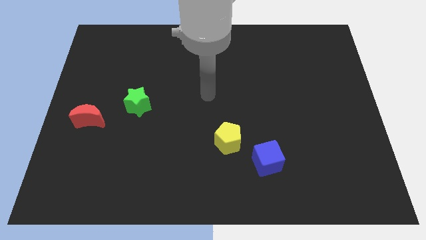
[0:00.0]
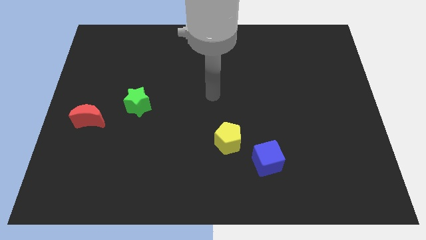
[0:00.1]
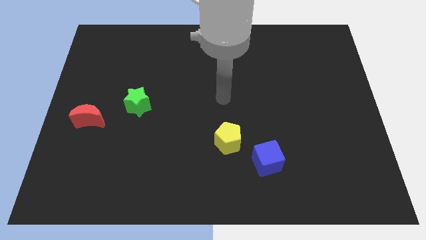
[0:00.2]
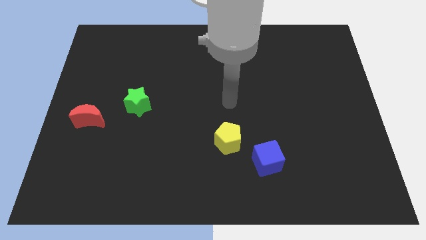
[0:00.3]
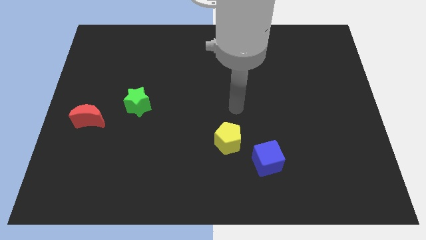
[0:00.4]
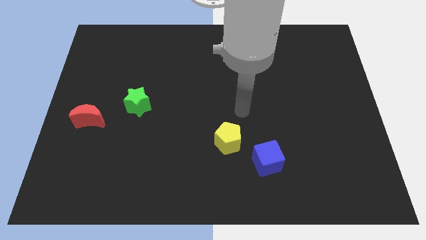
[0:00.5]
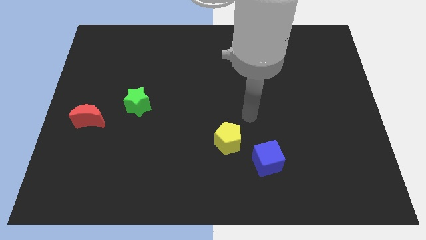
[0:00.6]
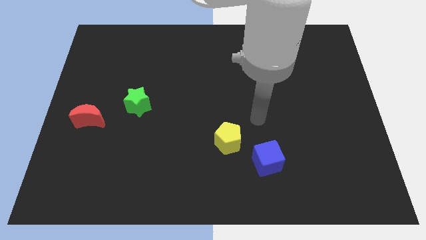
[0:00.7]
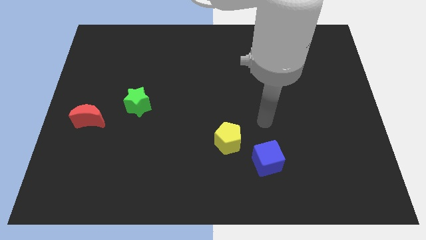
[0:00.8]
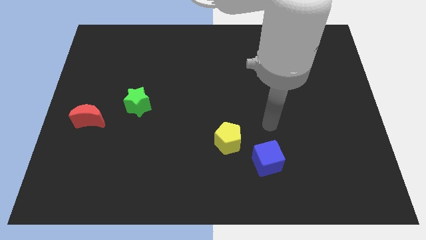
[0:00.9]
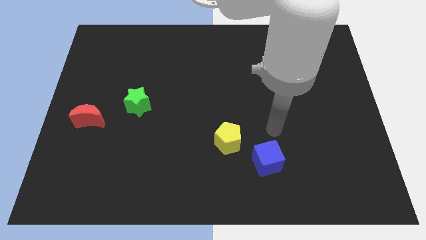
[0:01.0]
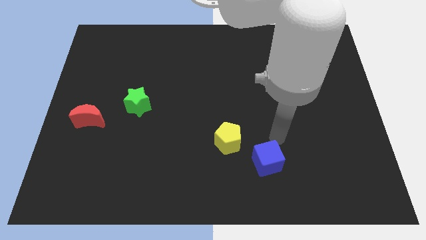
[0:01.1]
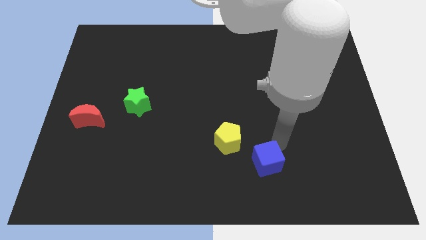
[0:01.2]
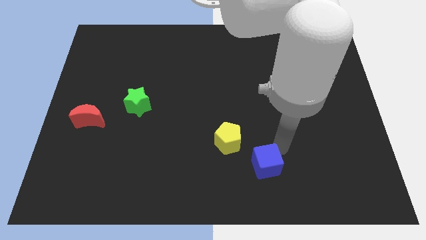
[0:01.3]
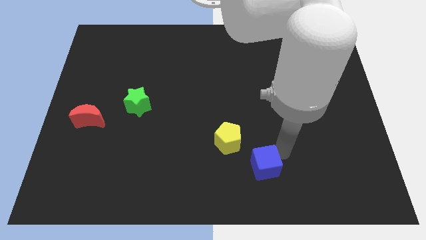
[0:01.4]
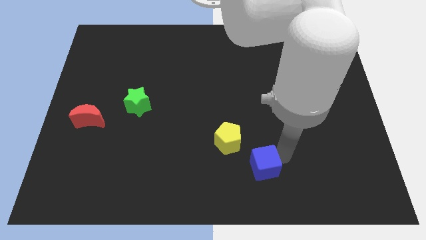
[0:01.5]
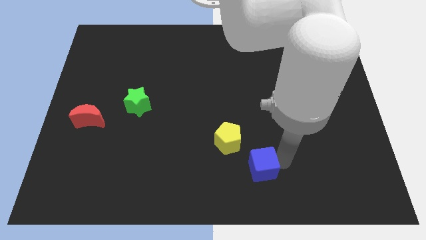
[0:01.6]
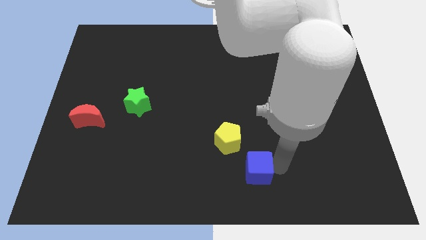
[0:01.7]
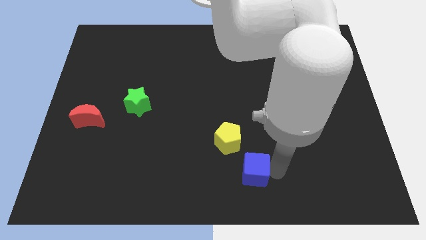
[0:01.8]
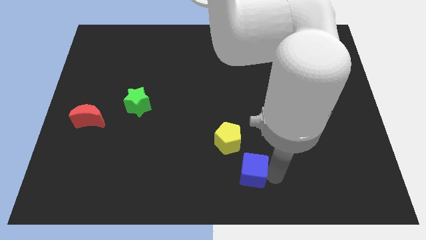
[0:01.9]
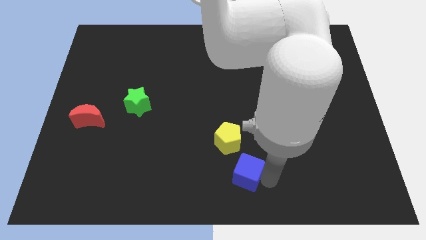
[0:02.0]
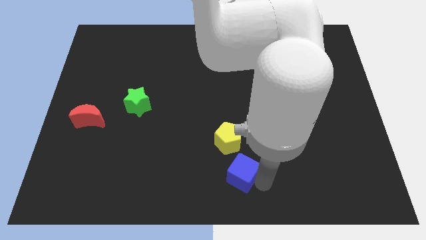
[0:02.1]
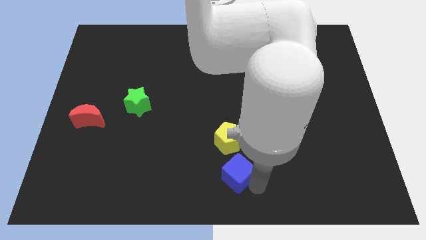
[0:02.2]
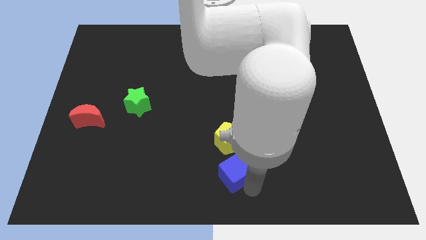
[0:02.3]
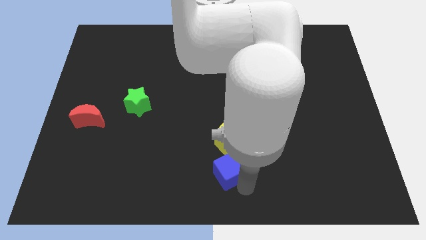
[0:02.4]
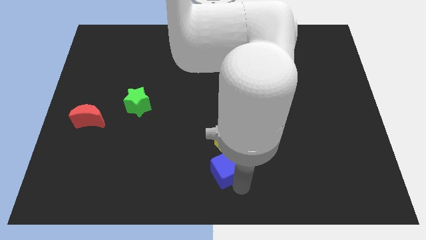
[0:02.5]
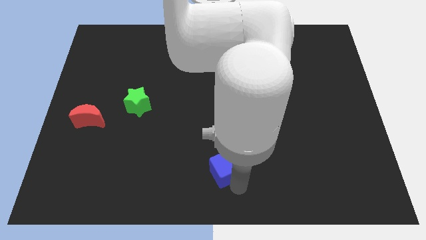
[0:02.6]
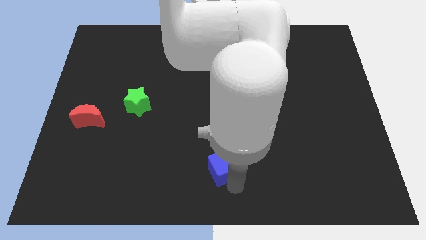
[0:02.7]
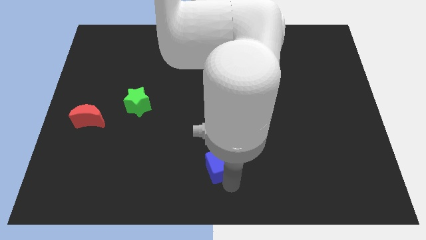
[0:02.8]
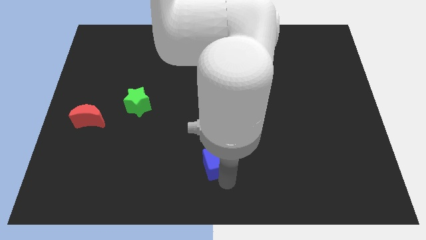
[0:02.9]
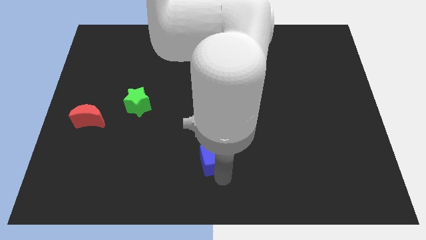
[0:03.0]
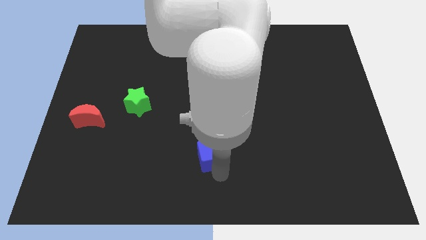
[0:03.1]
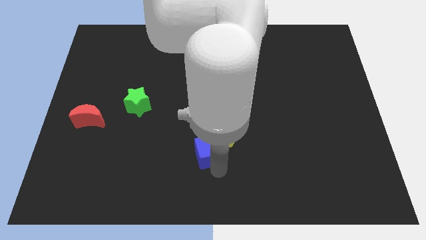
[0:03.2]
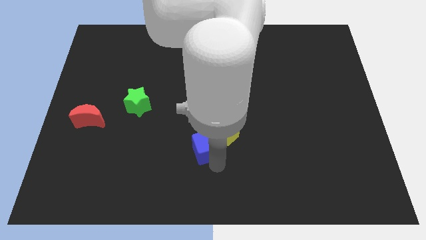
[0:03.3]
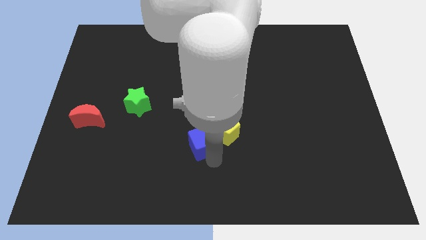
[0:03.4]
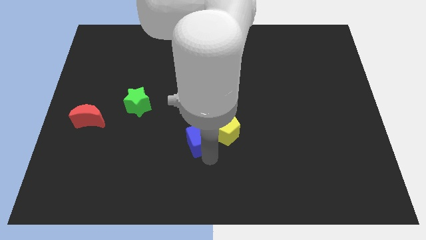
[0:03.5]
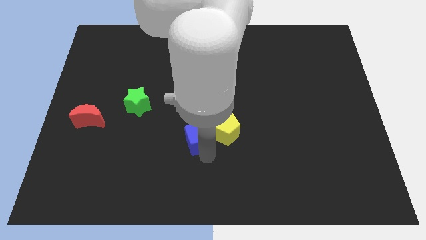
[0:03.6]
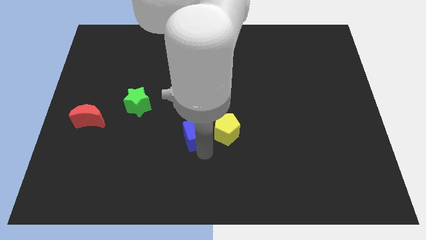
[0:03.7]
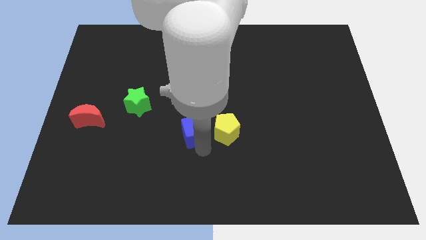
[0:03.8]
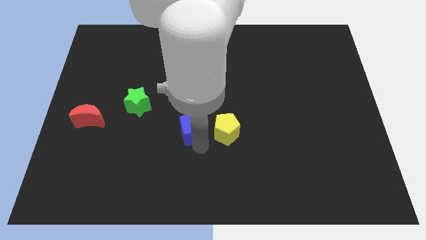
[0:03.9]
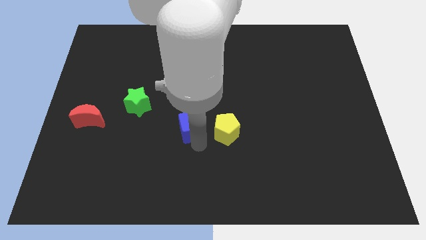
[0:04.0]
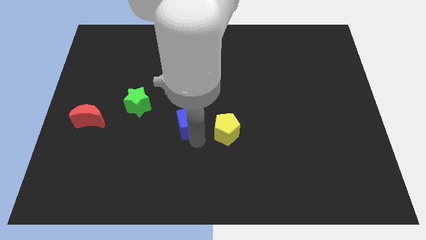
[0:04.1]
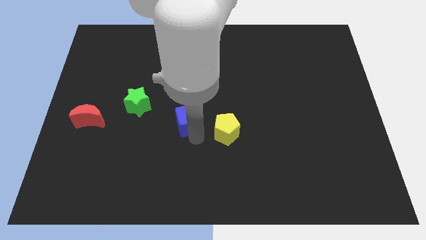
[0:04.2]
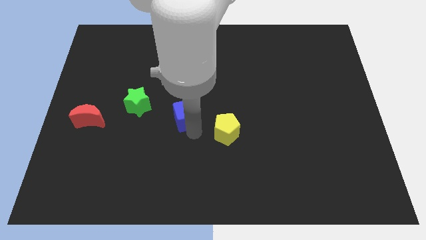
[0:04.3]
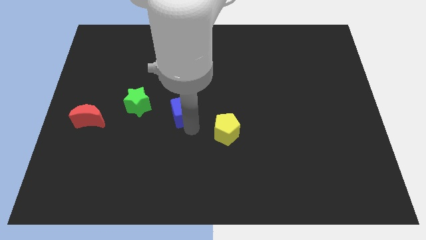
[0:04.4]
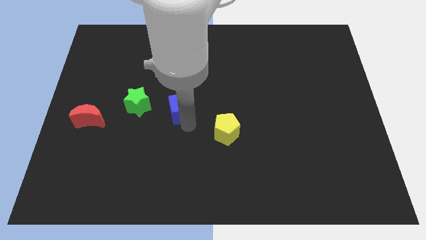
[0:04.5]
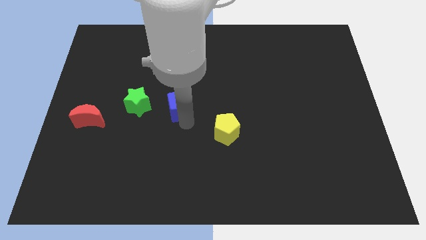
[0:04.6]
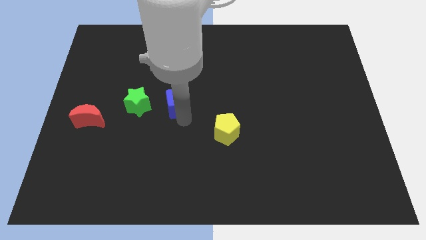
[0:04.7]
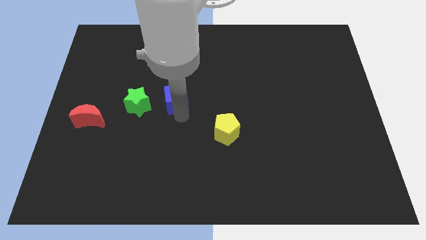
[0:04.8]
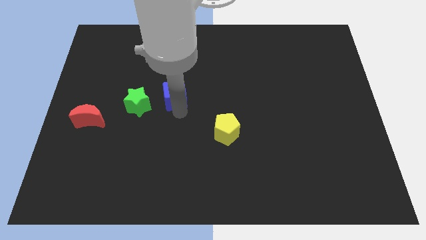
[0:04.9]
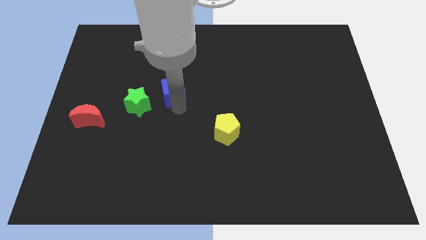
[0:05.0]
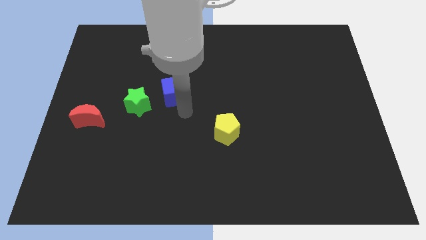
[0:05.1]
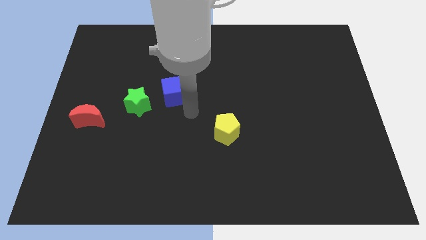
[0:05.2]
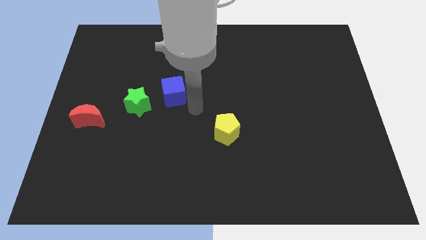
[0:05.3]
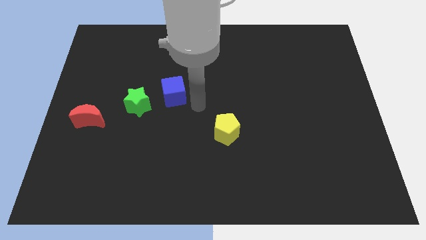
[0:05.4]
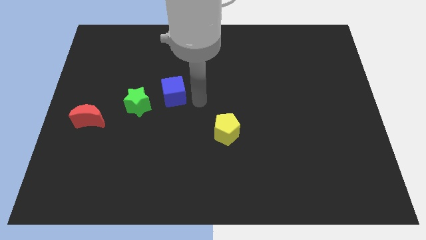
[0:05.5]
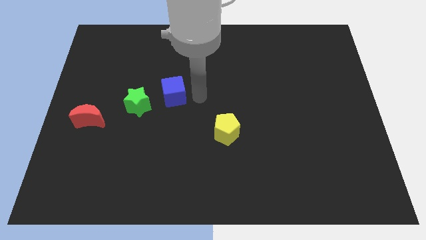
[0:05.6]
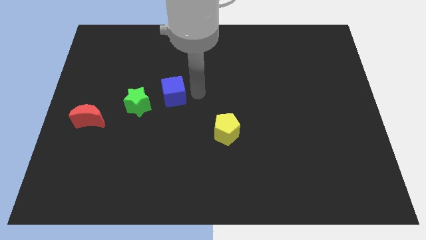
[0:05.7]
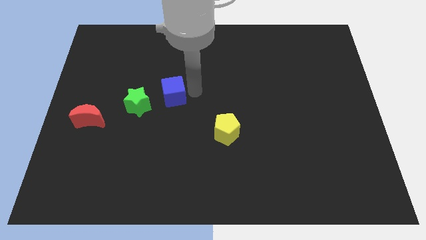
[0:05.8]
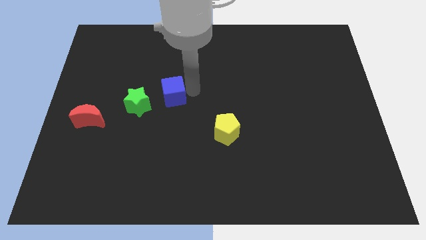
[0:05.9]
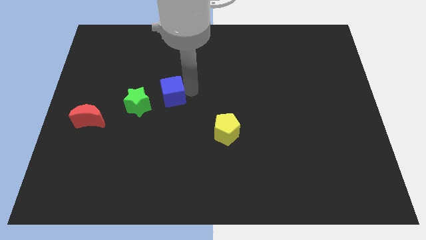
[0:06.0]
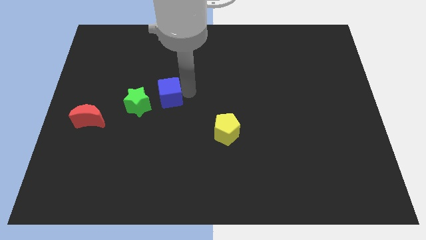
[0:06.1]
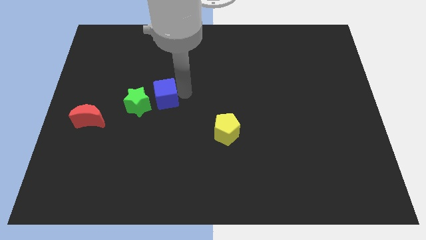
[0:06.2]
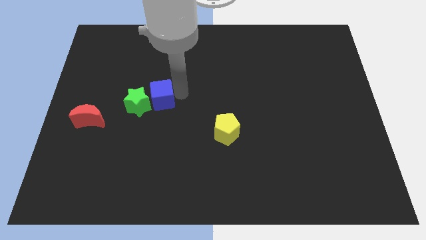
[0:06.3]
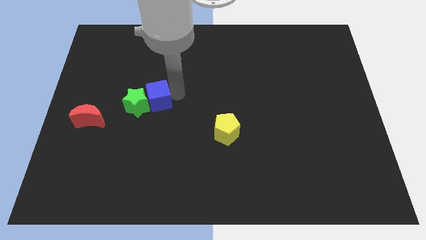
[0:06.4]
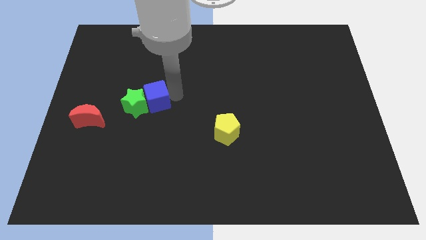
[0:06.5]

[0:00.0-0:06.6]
push the blue cube close to the star

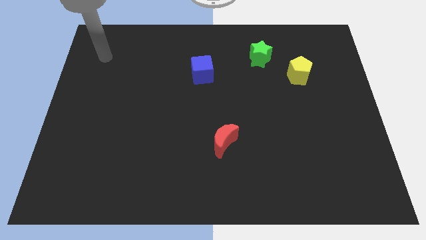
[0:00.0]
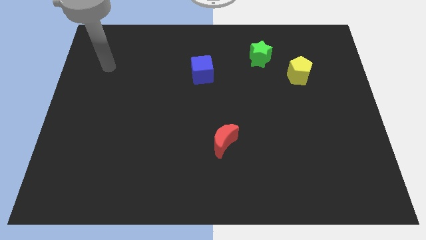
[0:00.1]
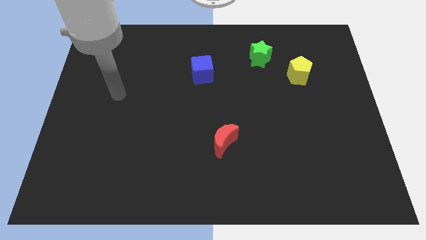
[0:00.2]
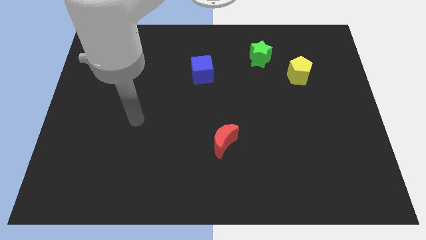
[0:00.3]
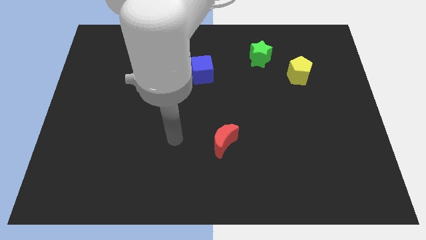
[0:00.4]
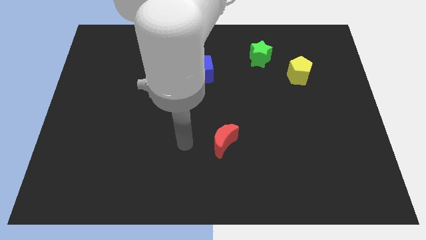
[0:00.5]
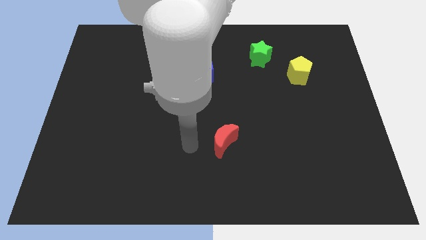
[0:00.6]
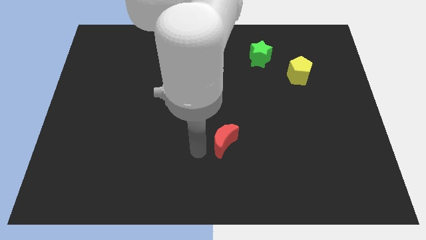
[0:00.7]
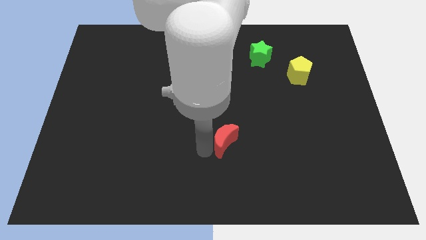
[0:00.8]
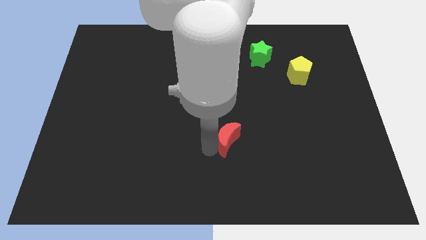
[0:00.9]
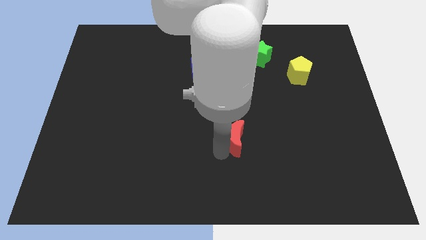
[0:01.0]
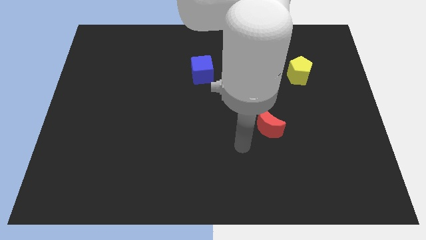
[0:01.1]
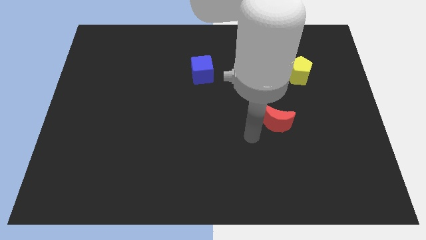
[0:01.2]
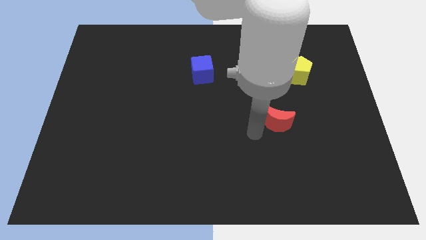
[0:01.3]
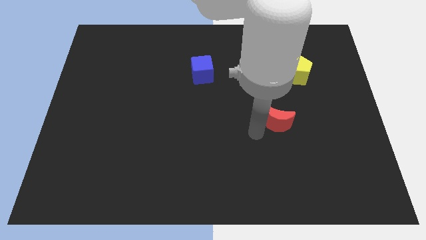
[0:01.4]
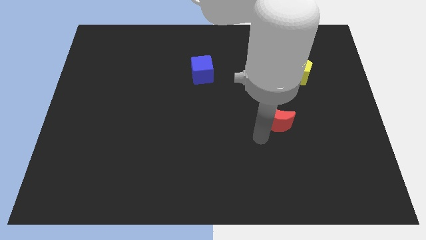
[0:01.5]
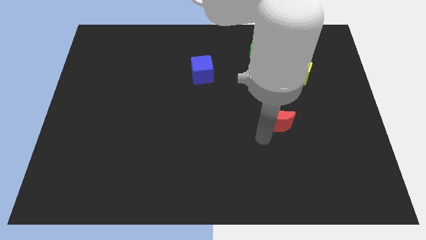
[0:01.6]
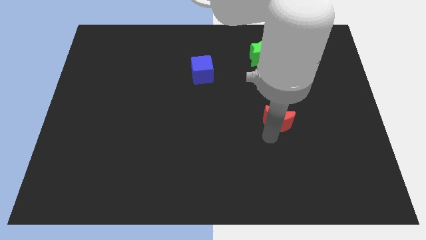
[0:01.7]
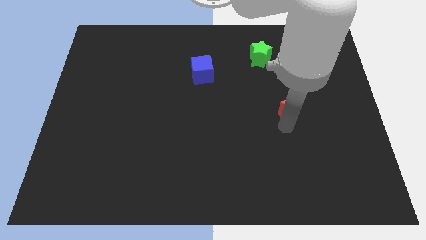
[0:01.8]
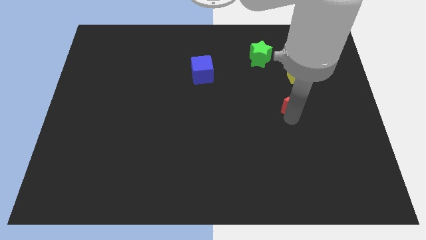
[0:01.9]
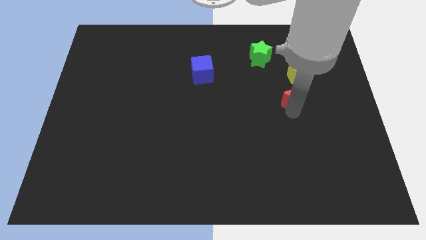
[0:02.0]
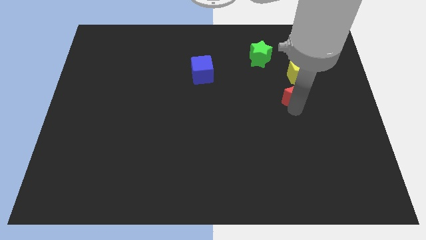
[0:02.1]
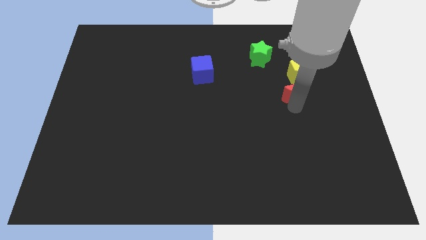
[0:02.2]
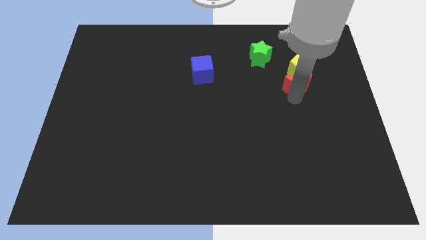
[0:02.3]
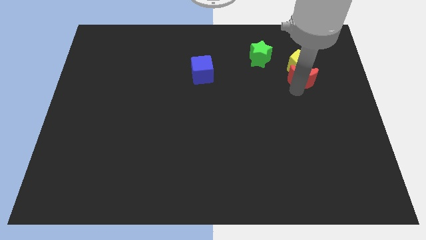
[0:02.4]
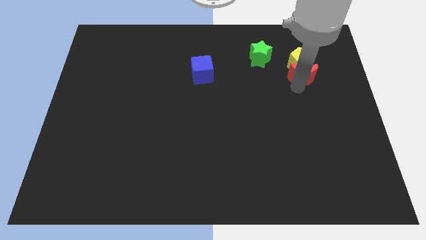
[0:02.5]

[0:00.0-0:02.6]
put the red block next to the pentagon
